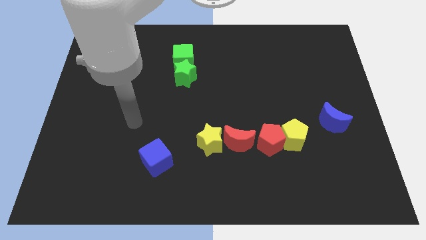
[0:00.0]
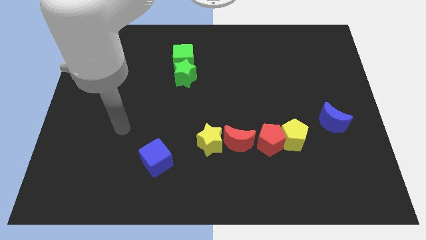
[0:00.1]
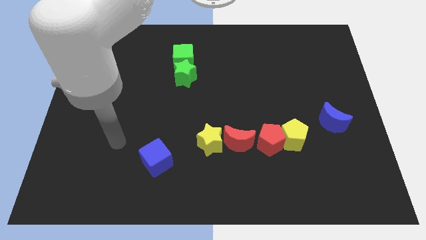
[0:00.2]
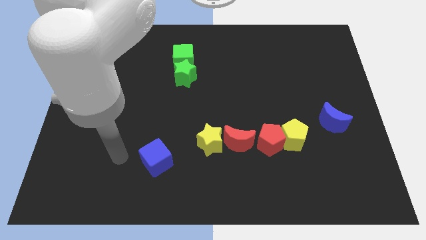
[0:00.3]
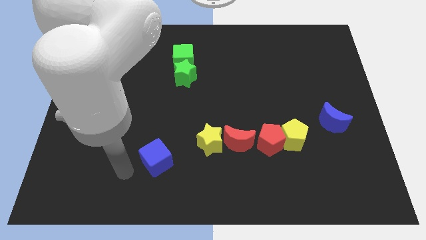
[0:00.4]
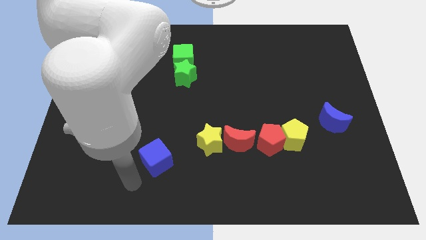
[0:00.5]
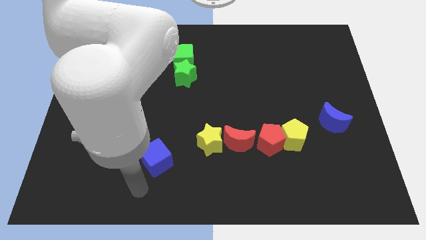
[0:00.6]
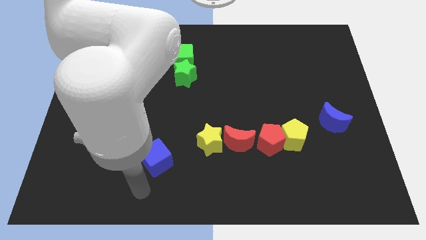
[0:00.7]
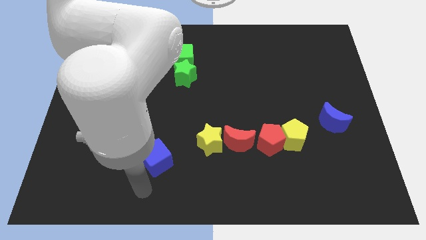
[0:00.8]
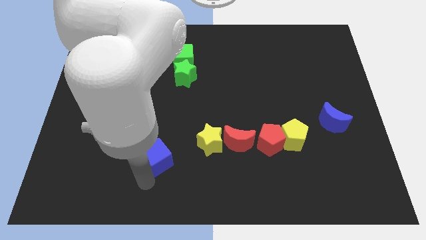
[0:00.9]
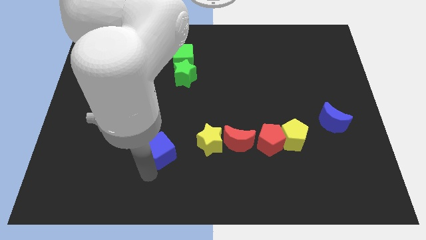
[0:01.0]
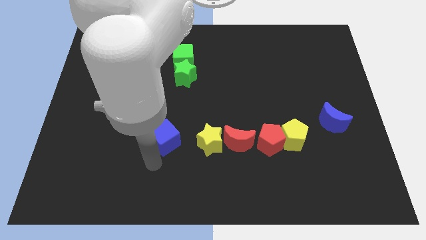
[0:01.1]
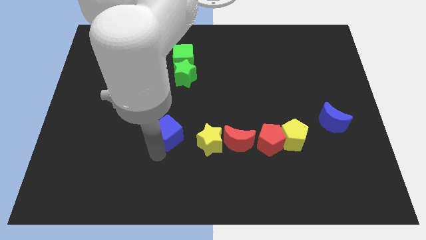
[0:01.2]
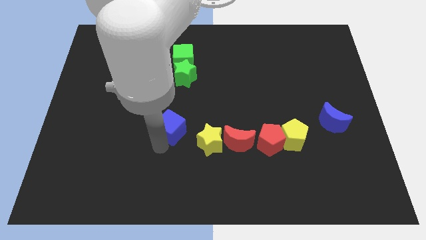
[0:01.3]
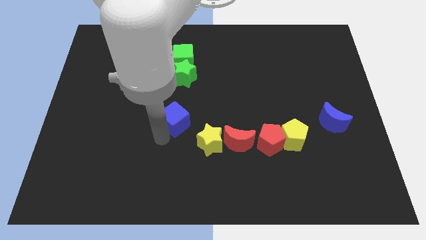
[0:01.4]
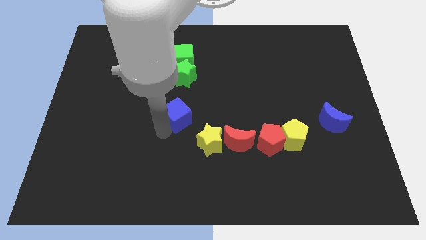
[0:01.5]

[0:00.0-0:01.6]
drag the blue cube towards the green star

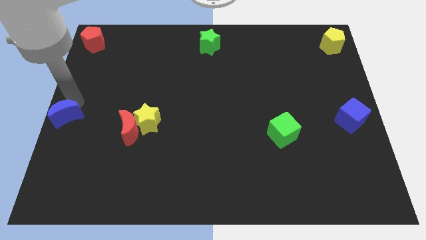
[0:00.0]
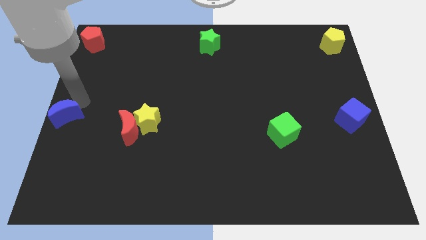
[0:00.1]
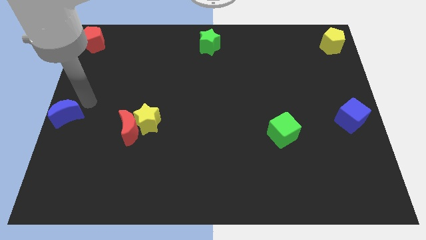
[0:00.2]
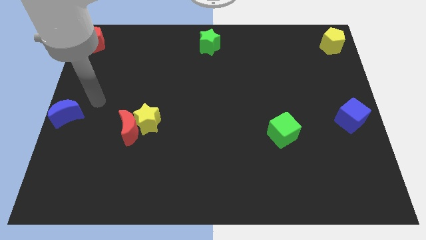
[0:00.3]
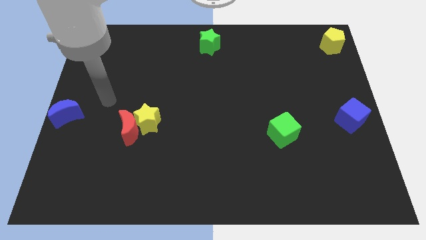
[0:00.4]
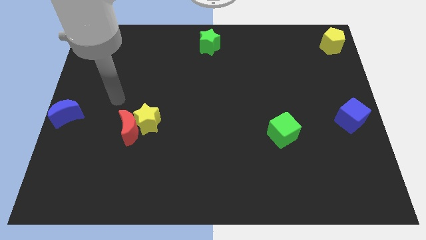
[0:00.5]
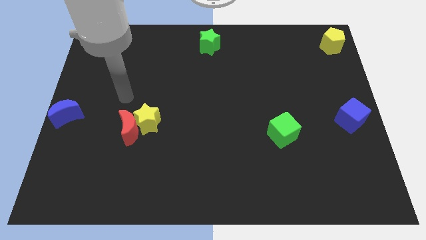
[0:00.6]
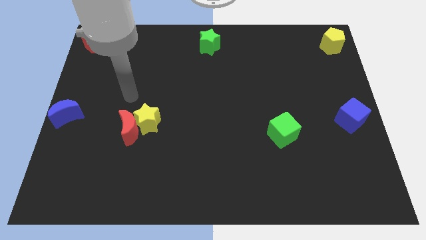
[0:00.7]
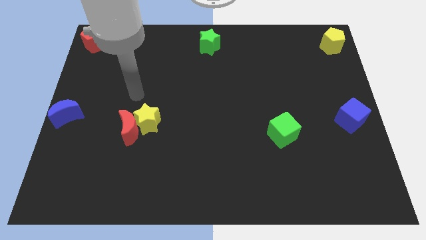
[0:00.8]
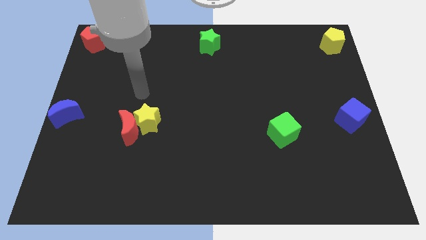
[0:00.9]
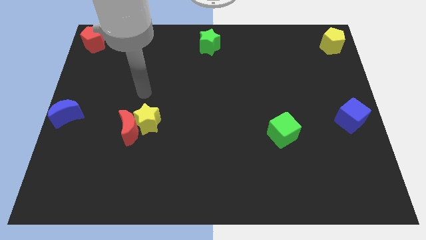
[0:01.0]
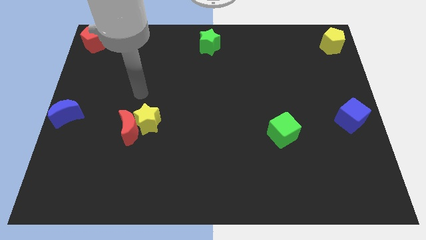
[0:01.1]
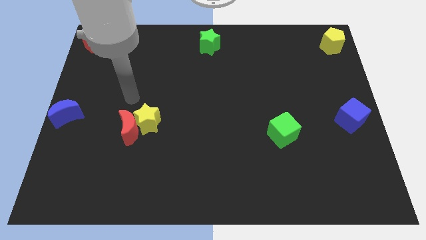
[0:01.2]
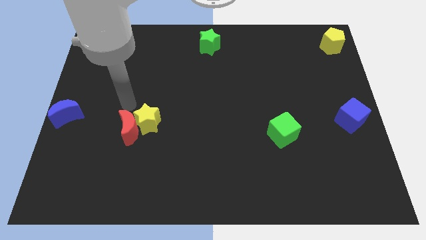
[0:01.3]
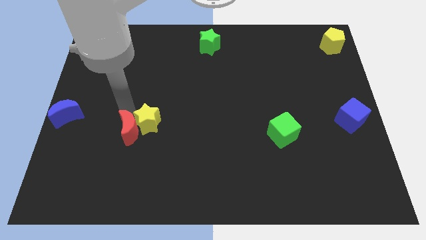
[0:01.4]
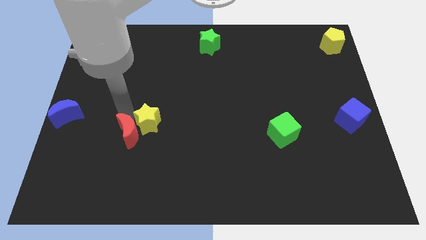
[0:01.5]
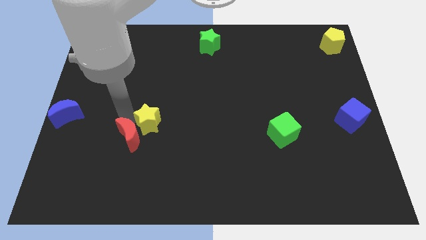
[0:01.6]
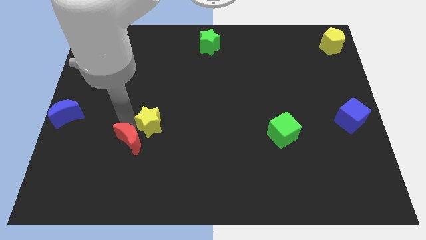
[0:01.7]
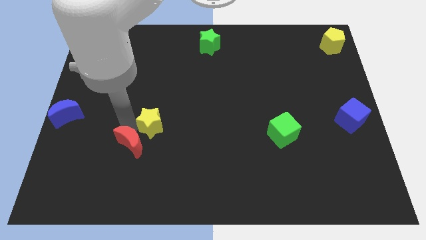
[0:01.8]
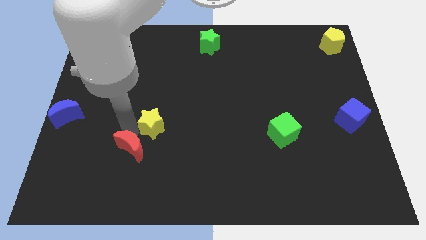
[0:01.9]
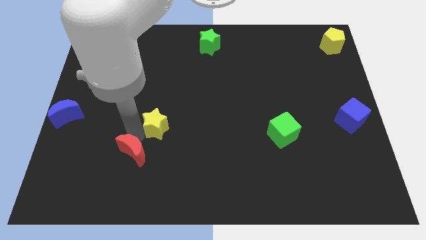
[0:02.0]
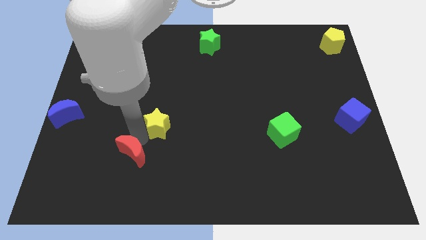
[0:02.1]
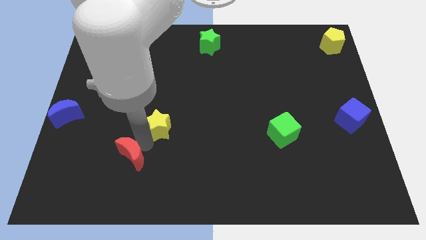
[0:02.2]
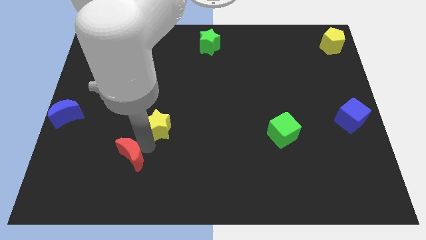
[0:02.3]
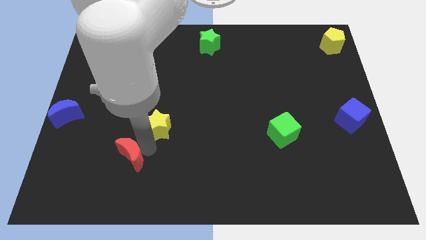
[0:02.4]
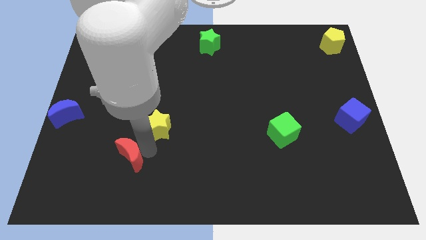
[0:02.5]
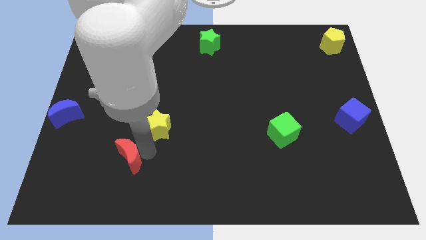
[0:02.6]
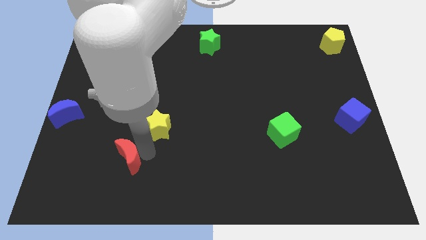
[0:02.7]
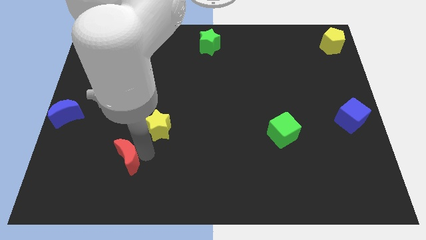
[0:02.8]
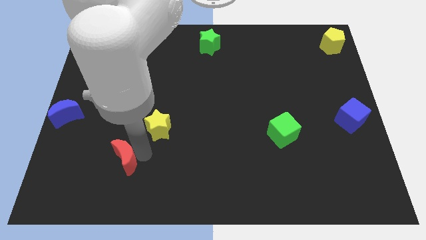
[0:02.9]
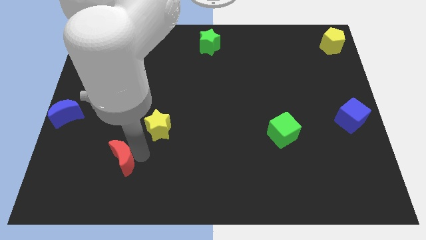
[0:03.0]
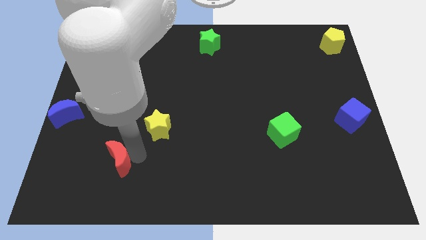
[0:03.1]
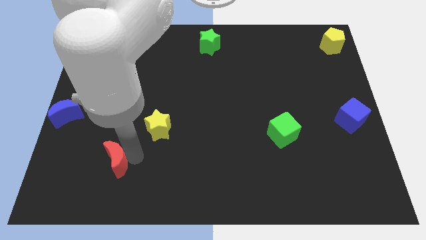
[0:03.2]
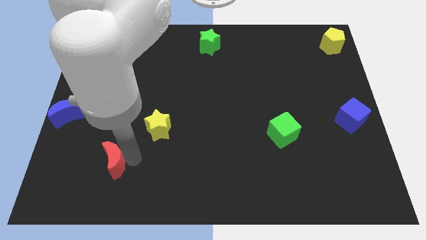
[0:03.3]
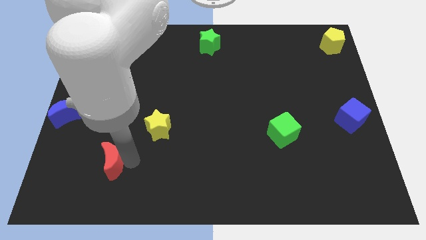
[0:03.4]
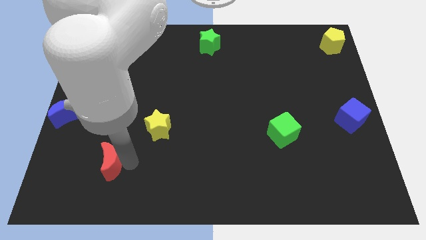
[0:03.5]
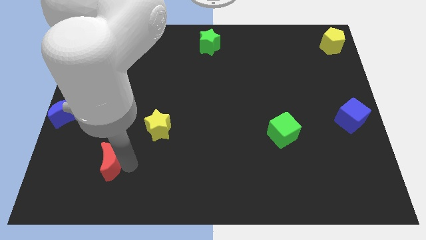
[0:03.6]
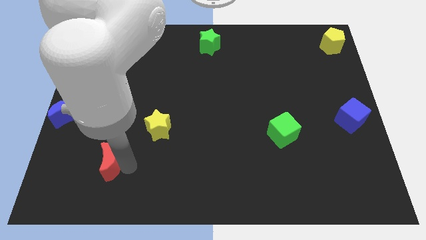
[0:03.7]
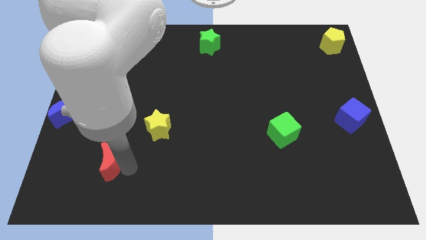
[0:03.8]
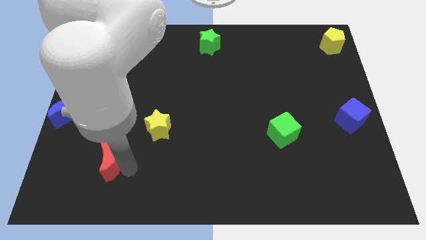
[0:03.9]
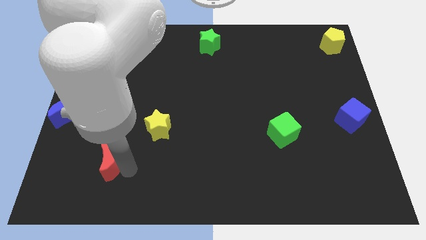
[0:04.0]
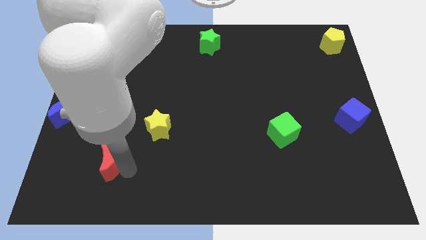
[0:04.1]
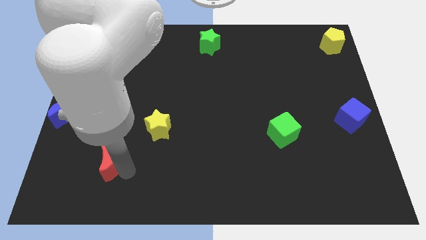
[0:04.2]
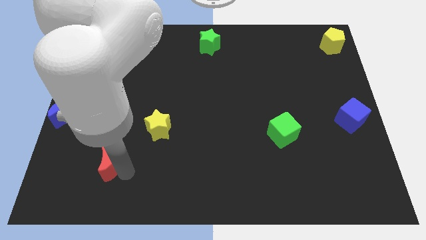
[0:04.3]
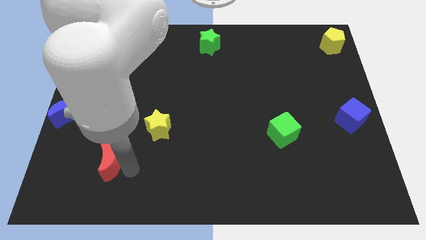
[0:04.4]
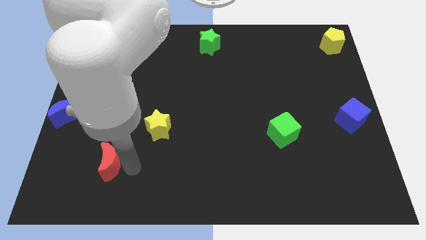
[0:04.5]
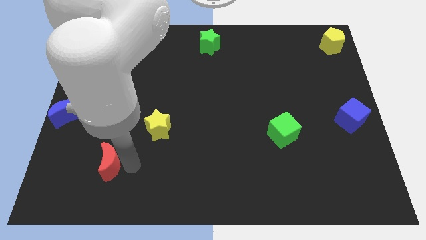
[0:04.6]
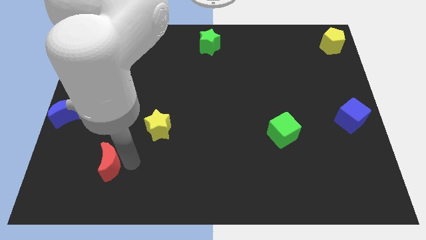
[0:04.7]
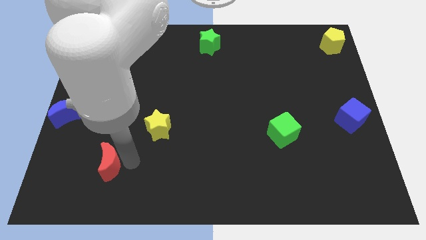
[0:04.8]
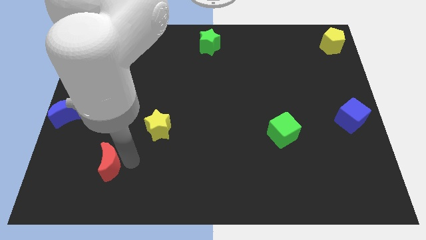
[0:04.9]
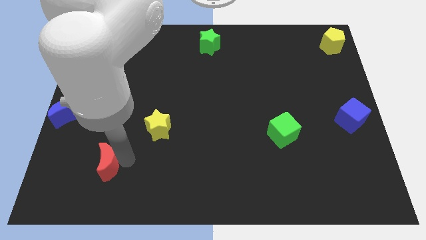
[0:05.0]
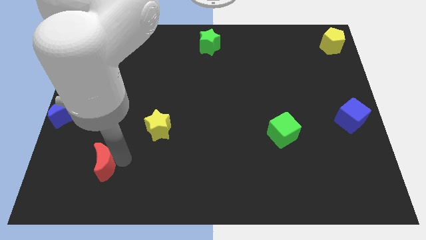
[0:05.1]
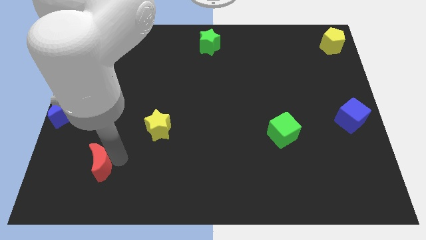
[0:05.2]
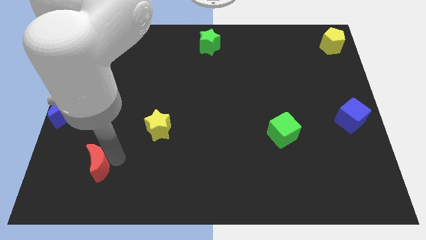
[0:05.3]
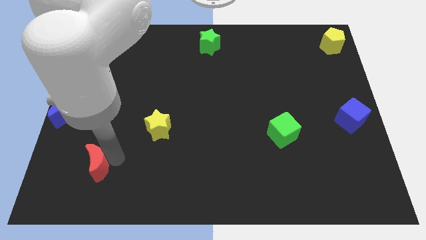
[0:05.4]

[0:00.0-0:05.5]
separate the red moon from the yellow star

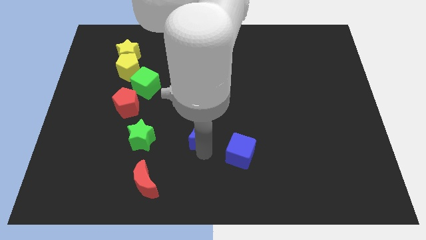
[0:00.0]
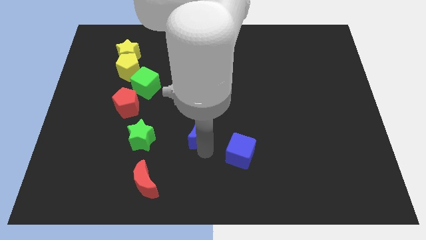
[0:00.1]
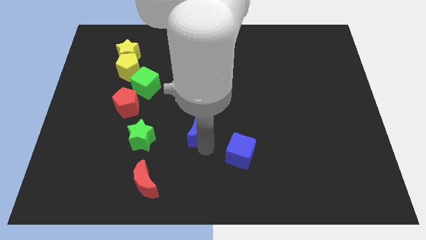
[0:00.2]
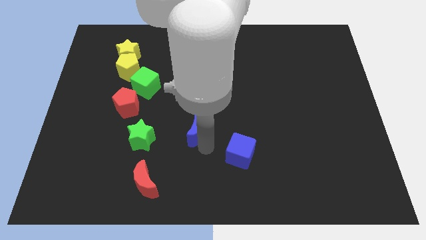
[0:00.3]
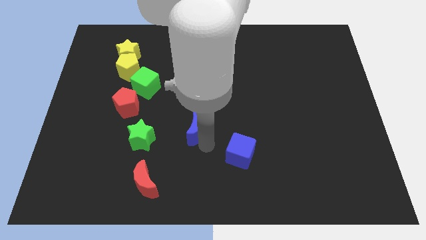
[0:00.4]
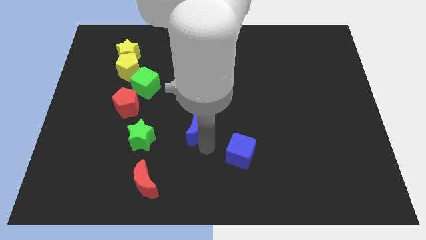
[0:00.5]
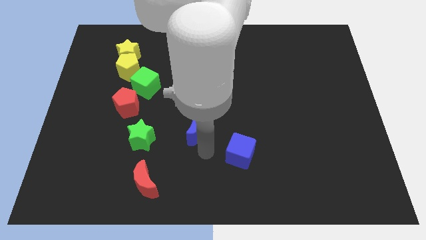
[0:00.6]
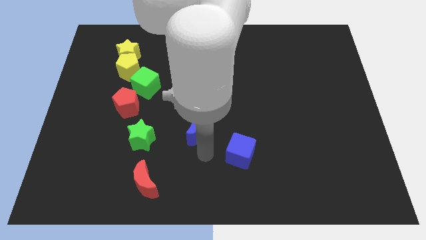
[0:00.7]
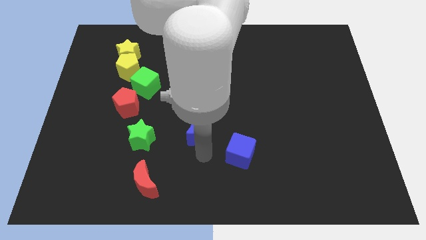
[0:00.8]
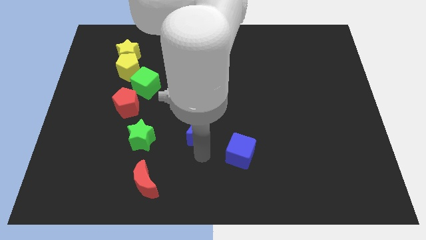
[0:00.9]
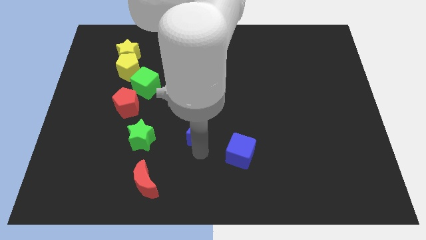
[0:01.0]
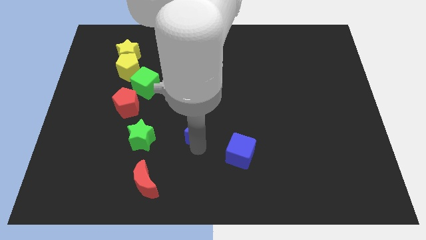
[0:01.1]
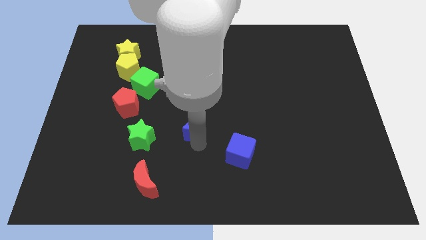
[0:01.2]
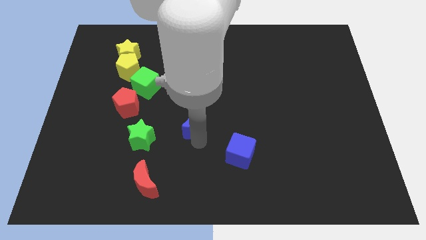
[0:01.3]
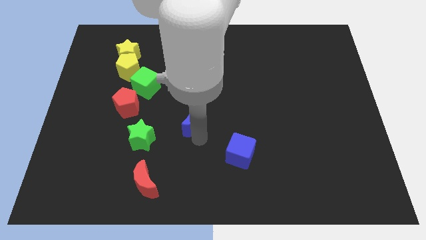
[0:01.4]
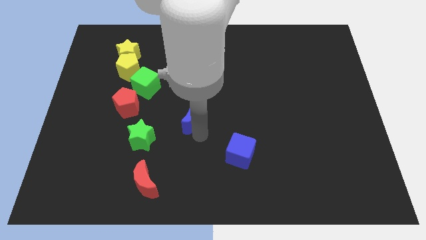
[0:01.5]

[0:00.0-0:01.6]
move the blue crescent slightly to the top of the board

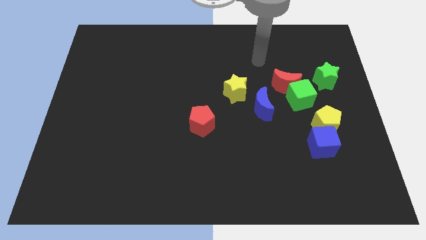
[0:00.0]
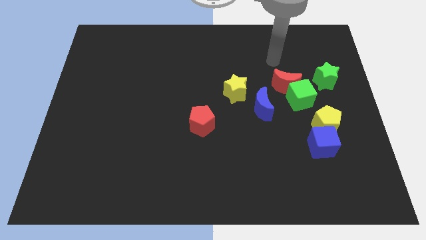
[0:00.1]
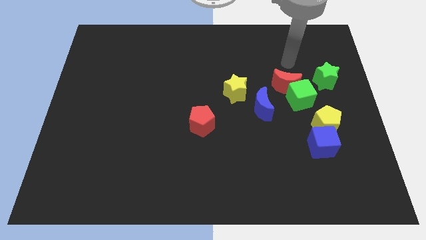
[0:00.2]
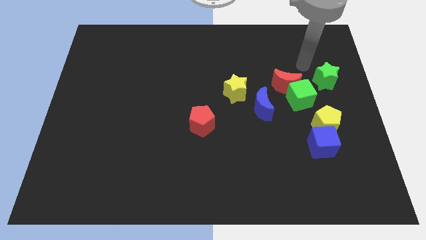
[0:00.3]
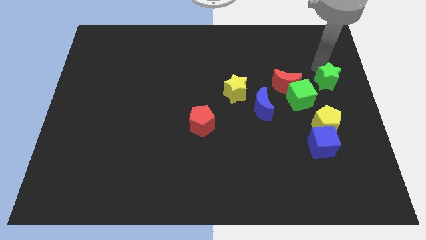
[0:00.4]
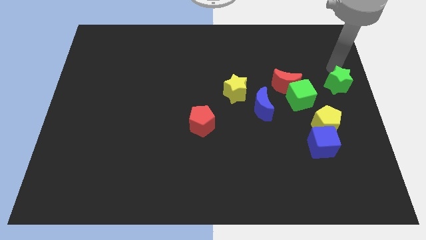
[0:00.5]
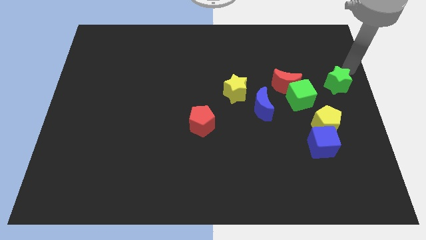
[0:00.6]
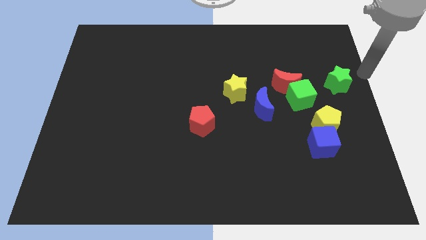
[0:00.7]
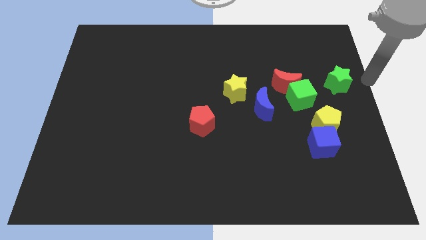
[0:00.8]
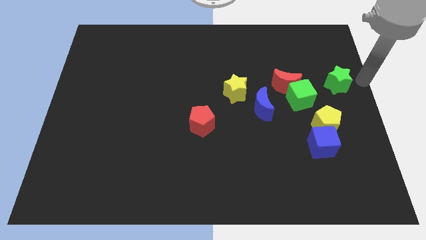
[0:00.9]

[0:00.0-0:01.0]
move your arm to the right side of the green star
